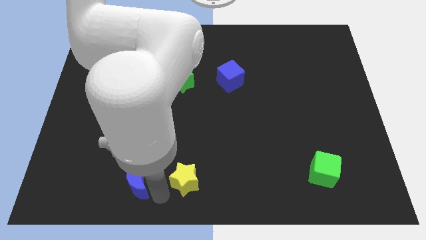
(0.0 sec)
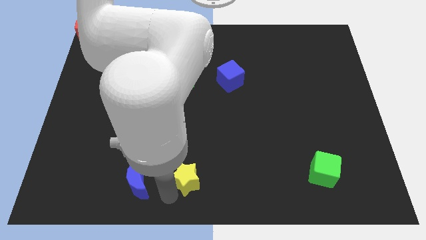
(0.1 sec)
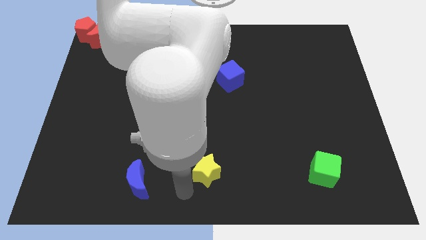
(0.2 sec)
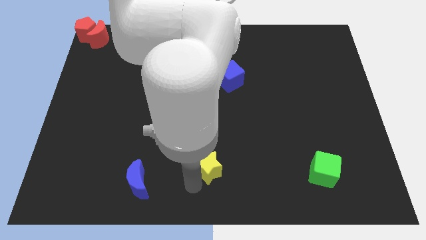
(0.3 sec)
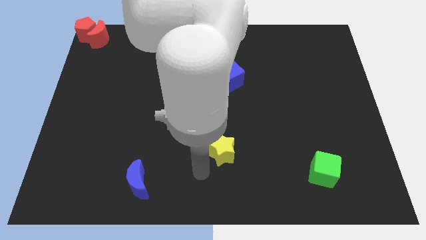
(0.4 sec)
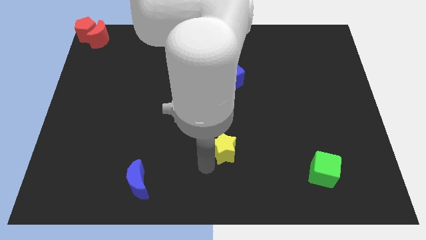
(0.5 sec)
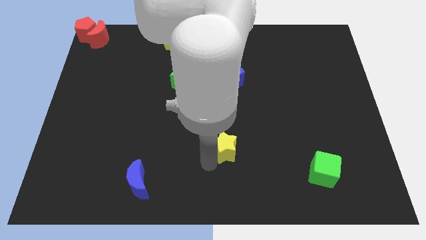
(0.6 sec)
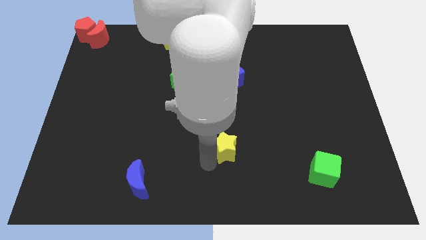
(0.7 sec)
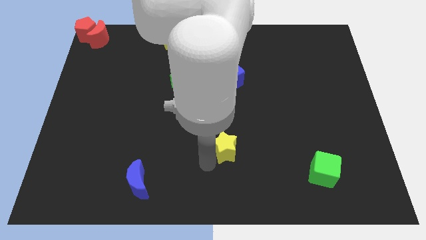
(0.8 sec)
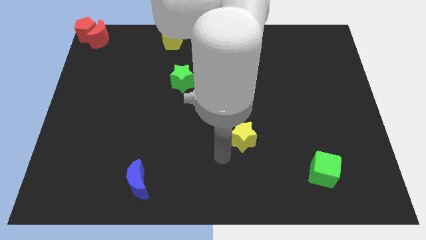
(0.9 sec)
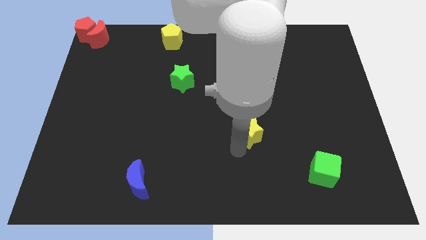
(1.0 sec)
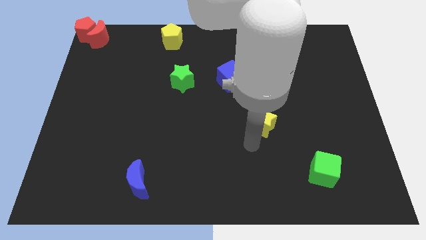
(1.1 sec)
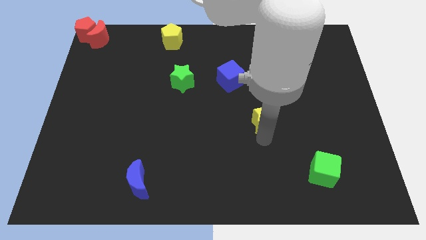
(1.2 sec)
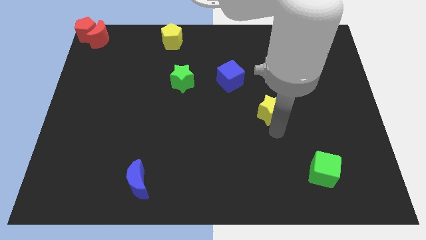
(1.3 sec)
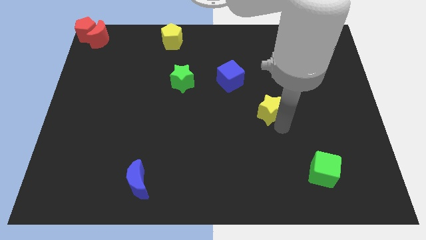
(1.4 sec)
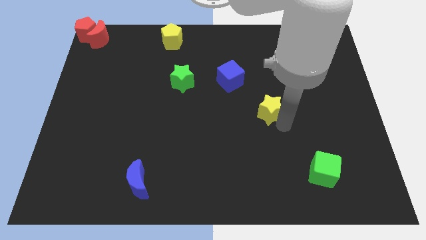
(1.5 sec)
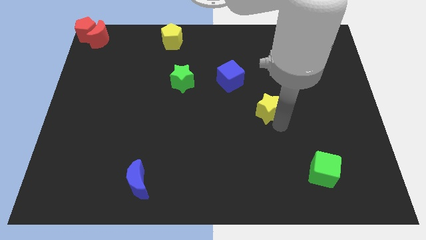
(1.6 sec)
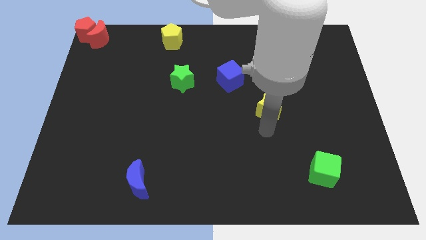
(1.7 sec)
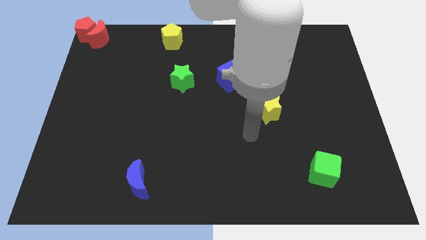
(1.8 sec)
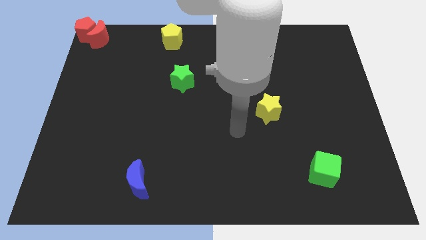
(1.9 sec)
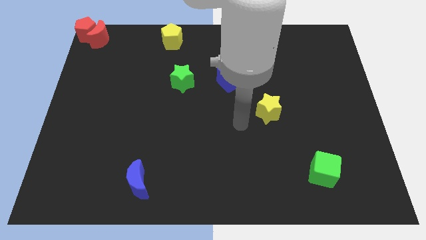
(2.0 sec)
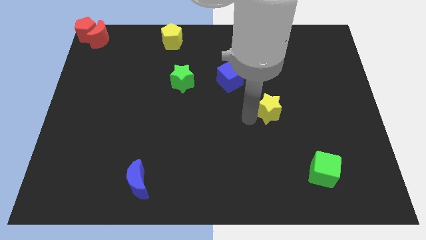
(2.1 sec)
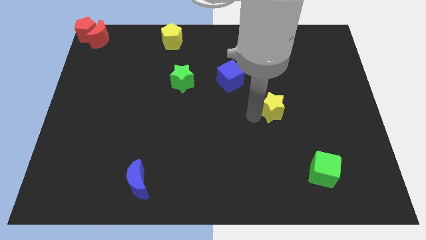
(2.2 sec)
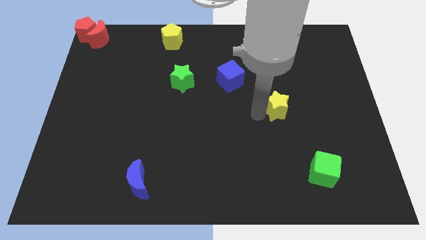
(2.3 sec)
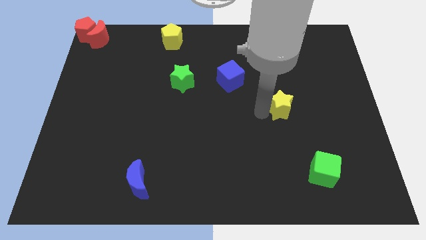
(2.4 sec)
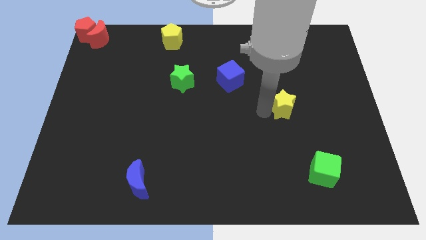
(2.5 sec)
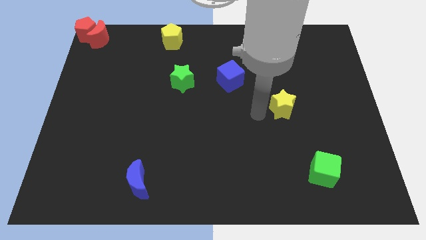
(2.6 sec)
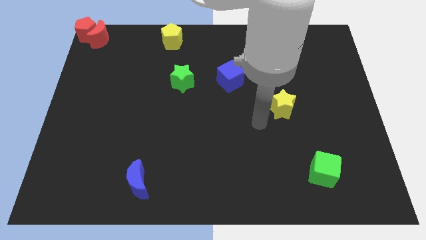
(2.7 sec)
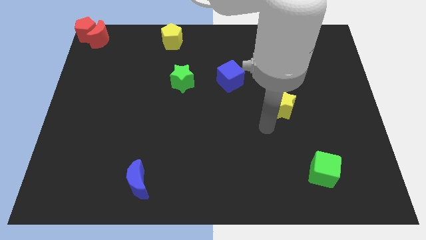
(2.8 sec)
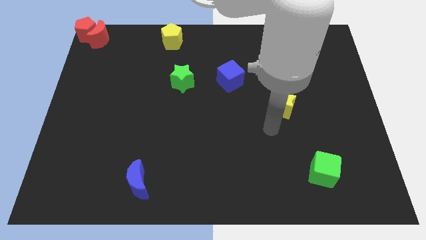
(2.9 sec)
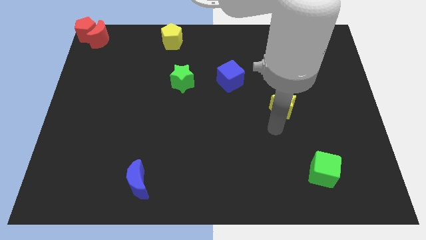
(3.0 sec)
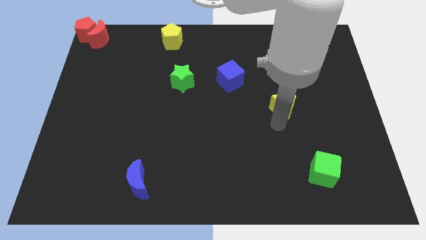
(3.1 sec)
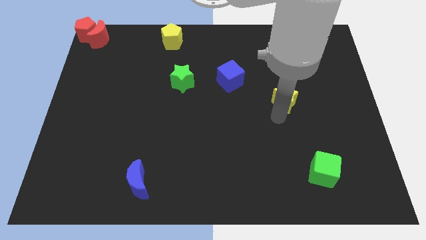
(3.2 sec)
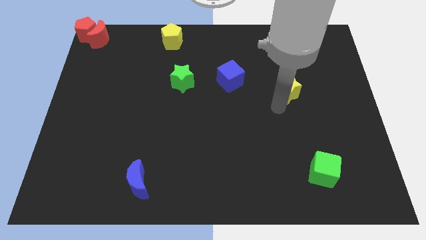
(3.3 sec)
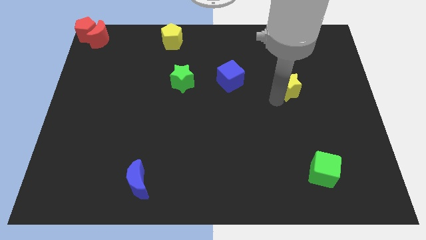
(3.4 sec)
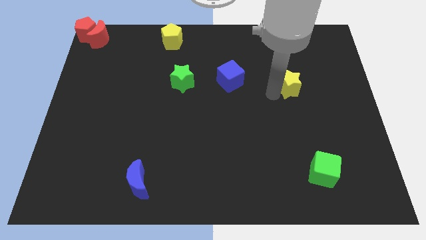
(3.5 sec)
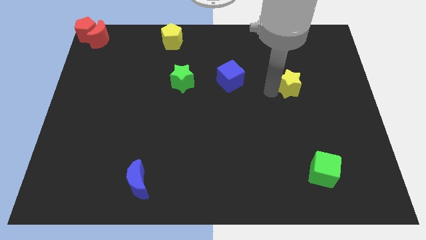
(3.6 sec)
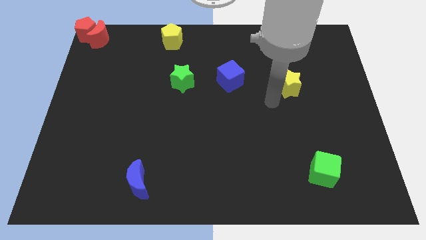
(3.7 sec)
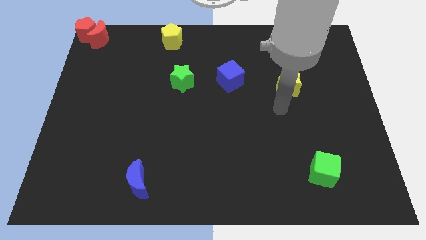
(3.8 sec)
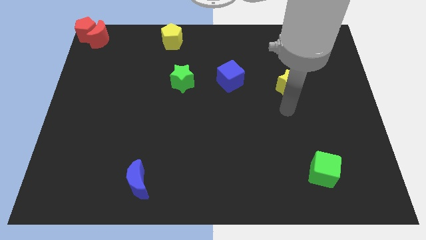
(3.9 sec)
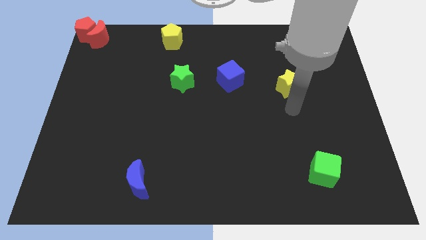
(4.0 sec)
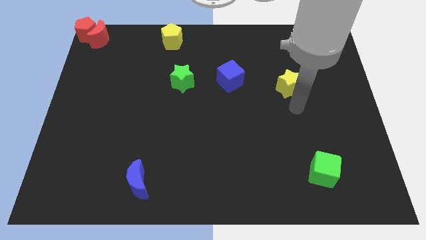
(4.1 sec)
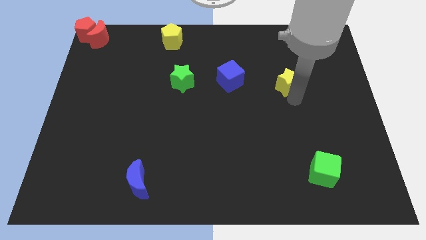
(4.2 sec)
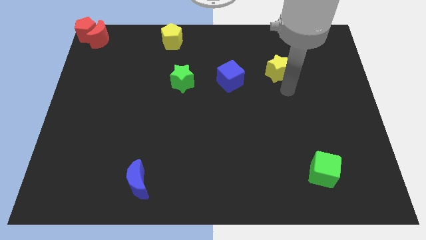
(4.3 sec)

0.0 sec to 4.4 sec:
push the yellow star to the right of the blue cube

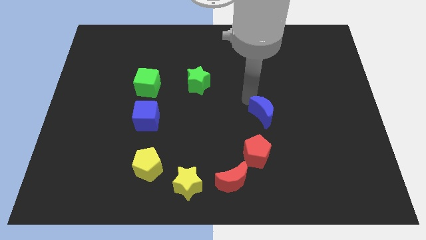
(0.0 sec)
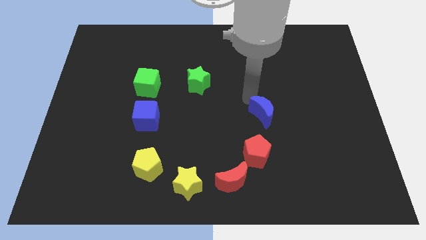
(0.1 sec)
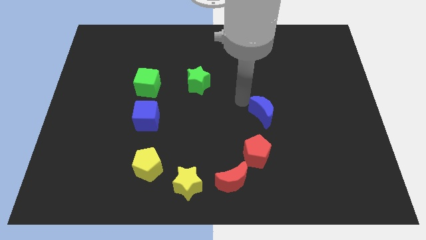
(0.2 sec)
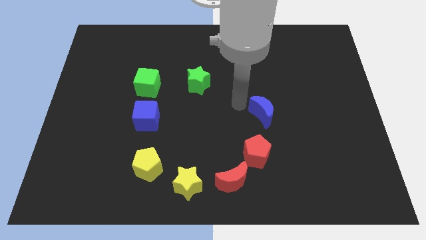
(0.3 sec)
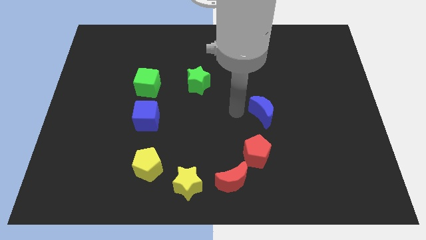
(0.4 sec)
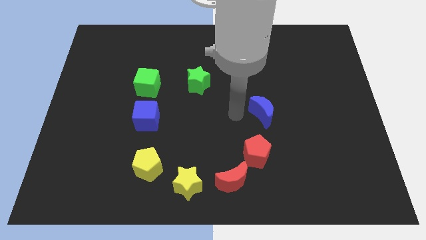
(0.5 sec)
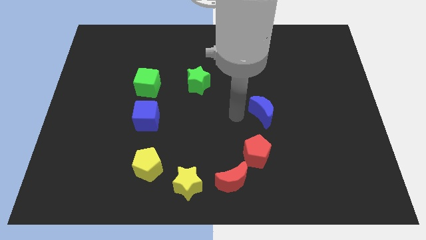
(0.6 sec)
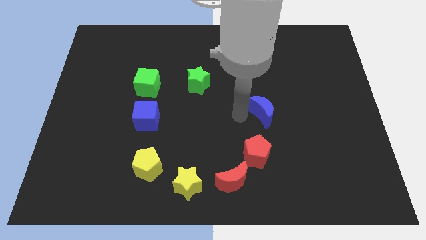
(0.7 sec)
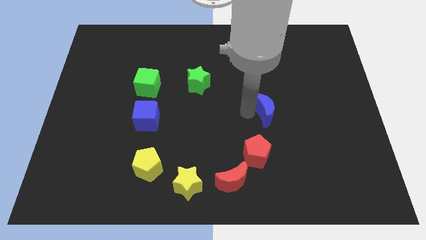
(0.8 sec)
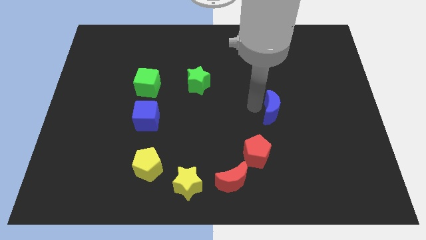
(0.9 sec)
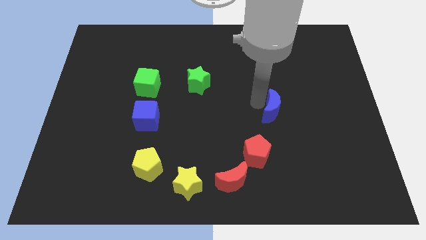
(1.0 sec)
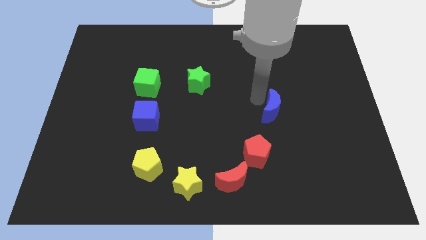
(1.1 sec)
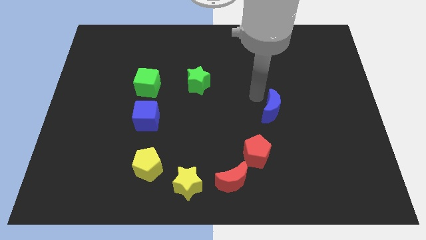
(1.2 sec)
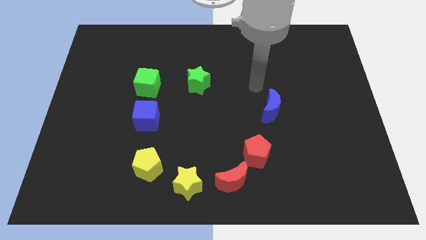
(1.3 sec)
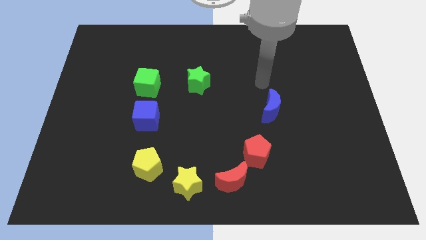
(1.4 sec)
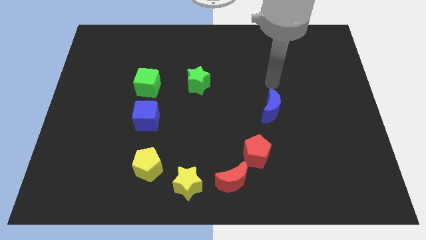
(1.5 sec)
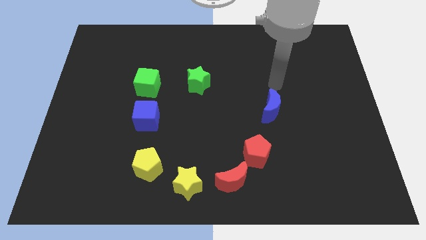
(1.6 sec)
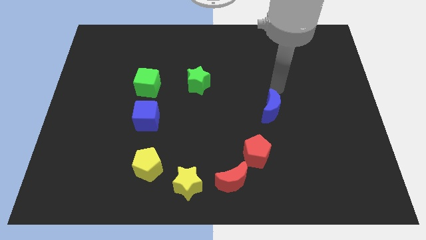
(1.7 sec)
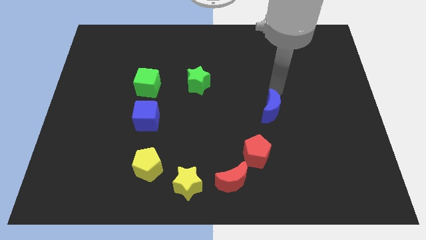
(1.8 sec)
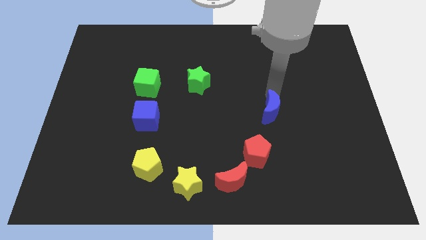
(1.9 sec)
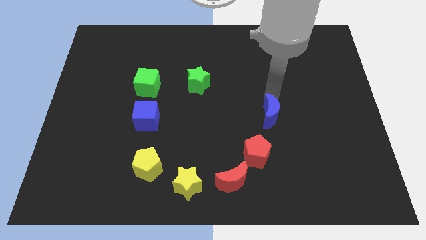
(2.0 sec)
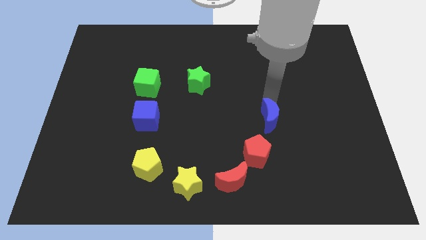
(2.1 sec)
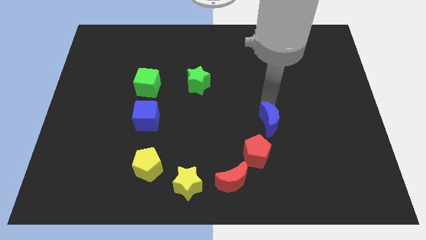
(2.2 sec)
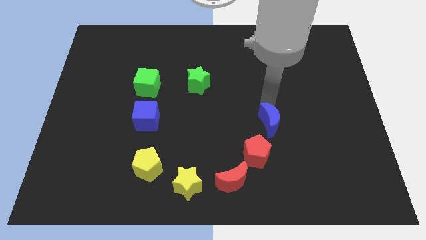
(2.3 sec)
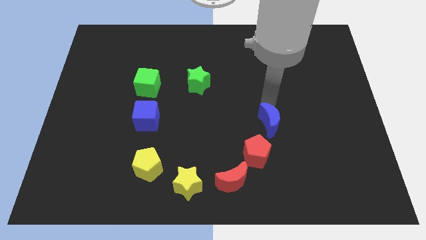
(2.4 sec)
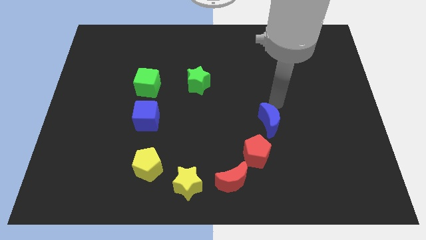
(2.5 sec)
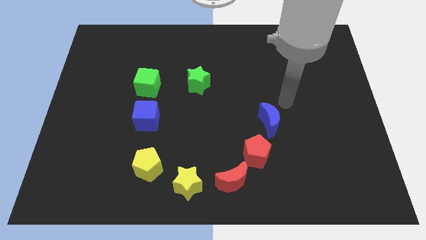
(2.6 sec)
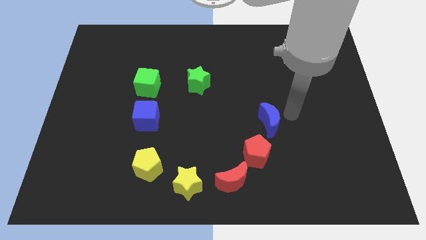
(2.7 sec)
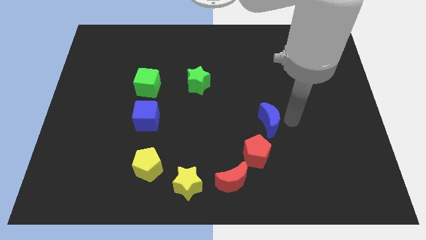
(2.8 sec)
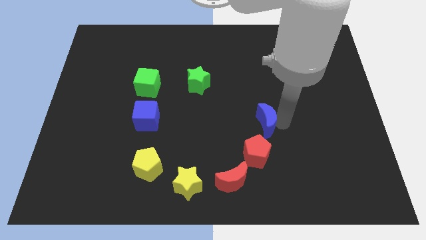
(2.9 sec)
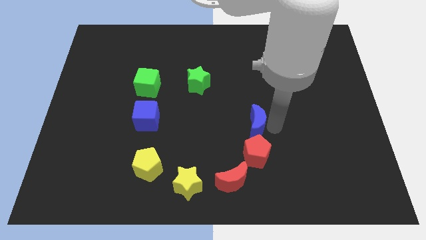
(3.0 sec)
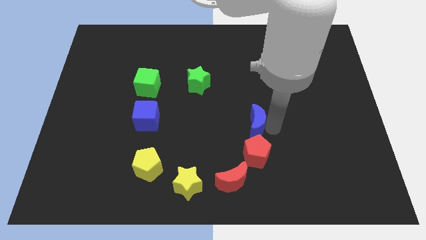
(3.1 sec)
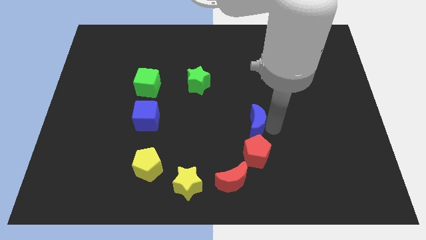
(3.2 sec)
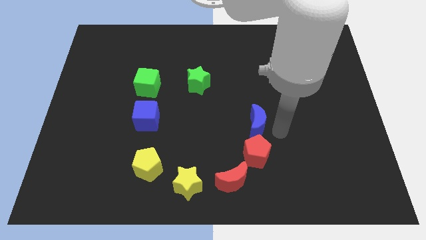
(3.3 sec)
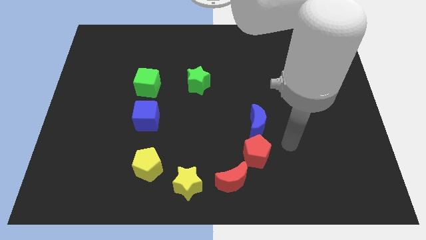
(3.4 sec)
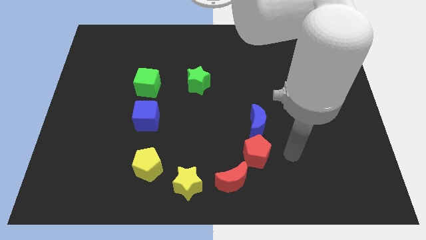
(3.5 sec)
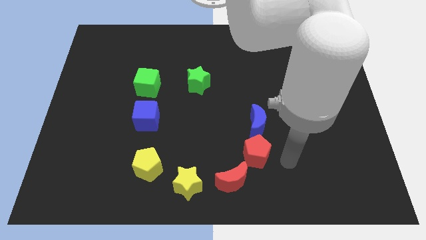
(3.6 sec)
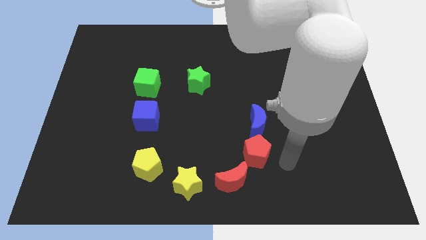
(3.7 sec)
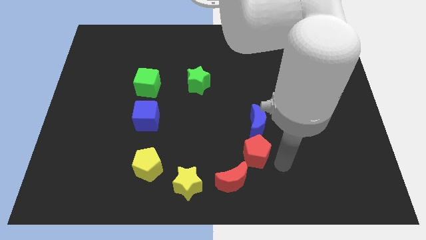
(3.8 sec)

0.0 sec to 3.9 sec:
move blue moon into the red pentagon

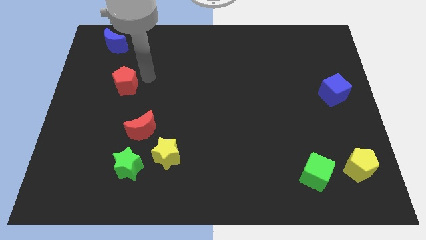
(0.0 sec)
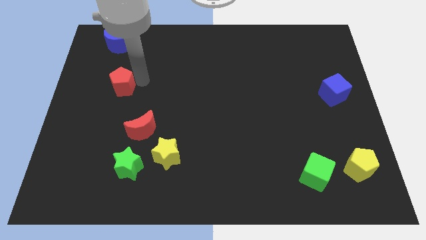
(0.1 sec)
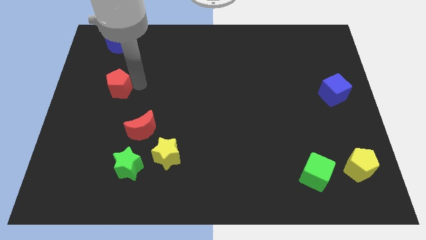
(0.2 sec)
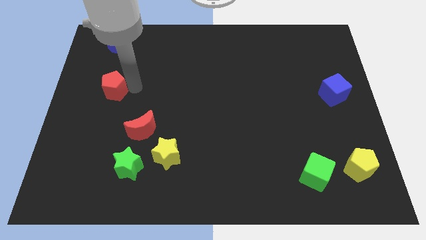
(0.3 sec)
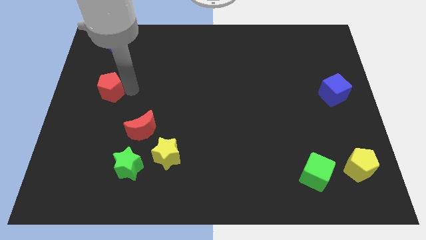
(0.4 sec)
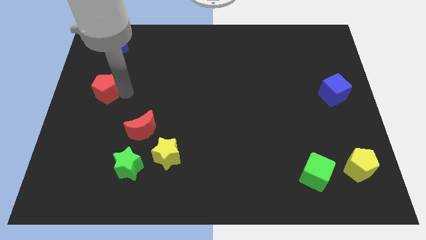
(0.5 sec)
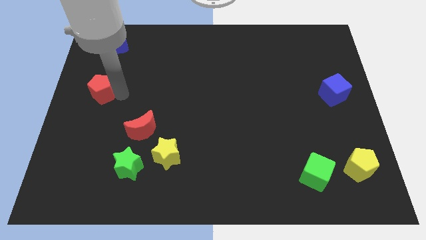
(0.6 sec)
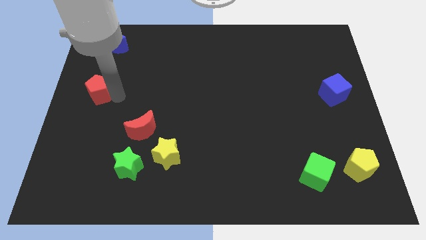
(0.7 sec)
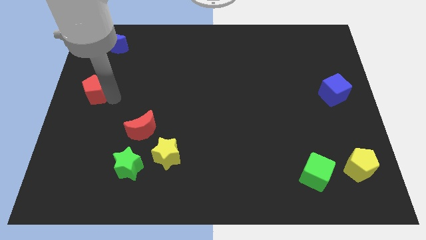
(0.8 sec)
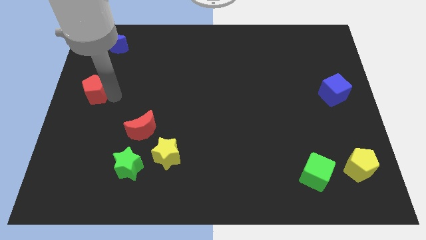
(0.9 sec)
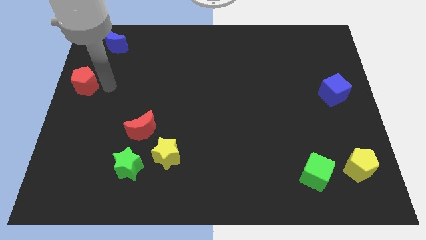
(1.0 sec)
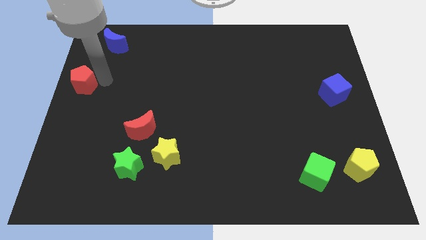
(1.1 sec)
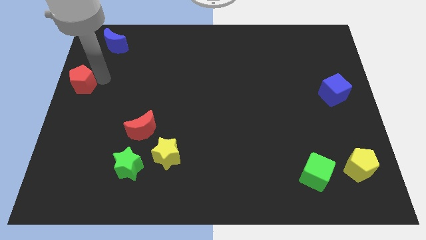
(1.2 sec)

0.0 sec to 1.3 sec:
move the red pentagon to the left of the board
